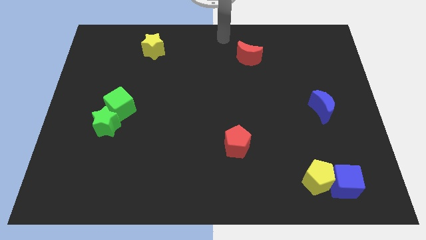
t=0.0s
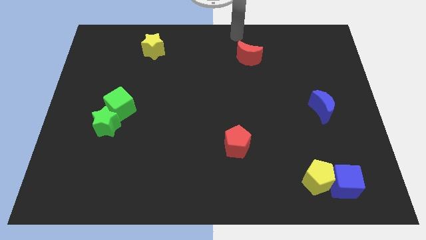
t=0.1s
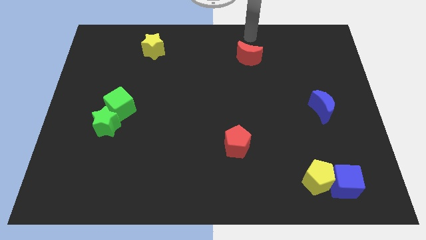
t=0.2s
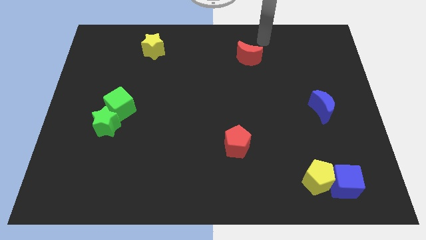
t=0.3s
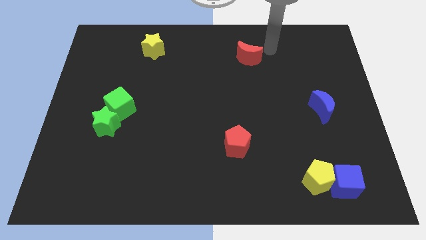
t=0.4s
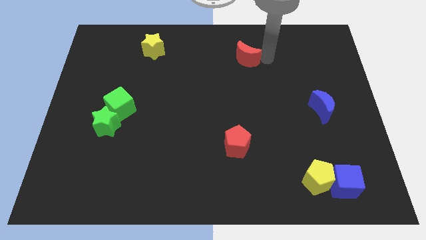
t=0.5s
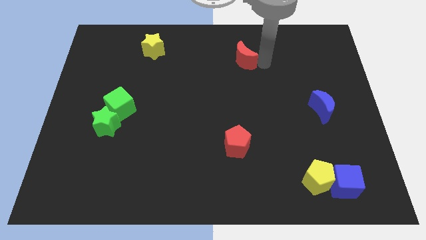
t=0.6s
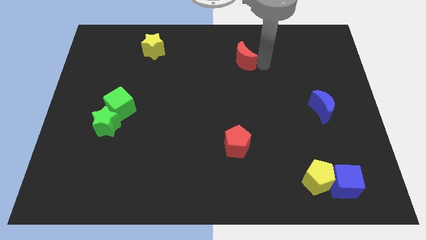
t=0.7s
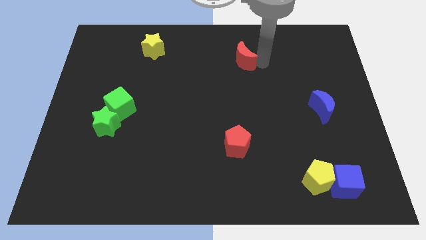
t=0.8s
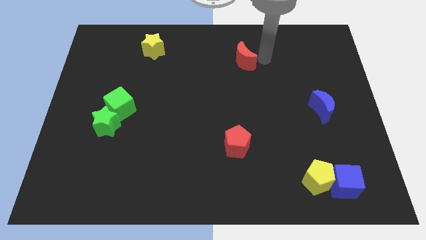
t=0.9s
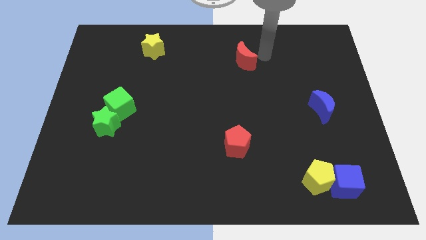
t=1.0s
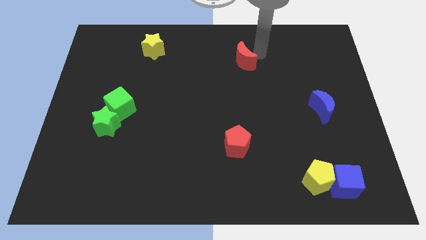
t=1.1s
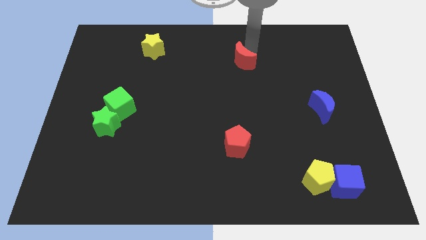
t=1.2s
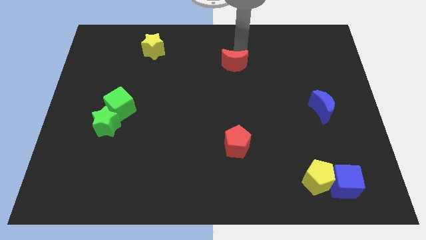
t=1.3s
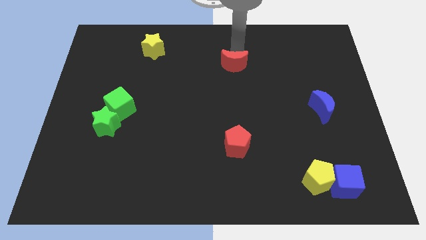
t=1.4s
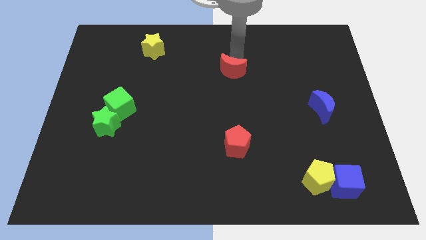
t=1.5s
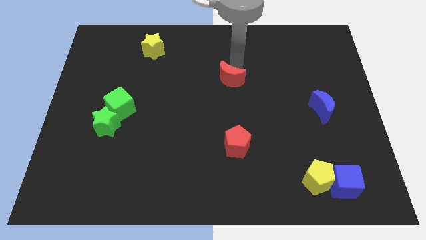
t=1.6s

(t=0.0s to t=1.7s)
slide the red moon towards the red pentagon

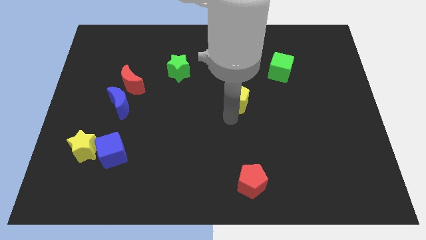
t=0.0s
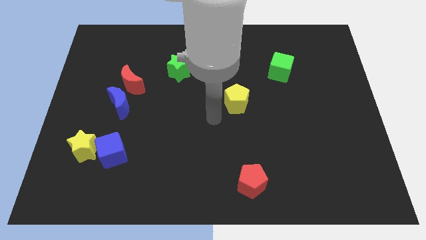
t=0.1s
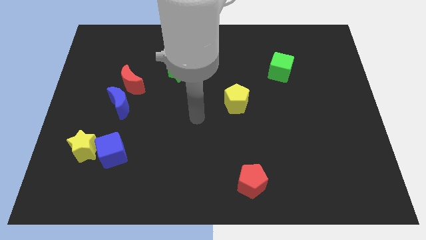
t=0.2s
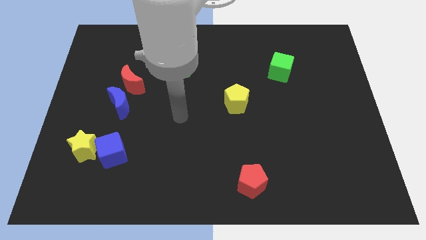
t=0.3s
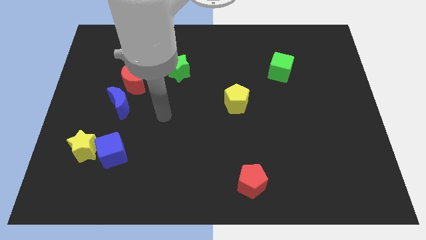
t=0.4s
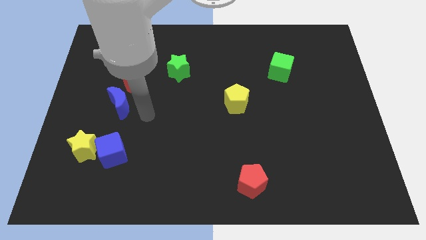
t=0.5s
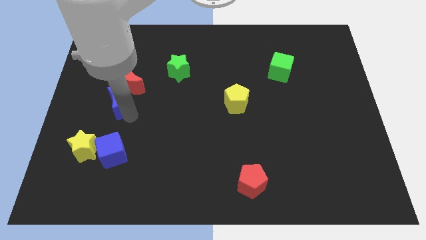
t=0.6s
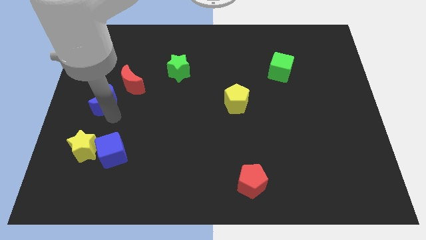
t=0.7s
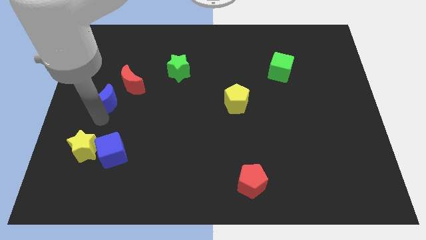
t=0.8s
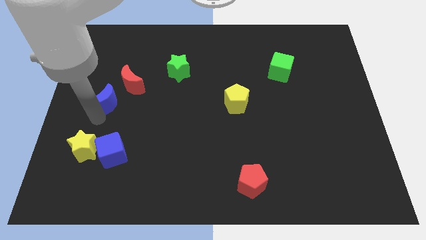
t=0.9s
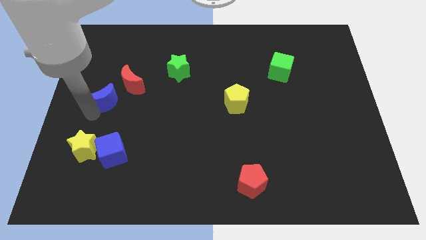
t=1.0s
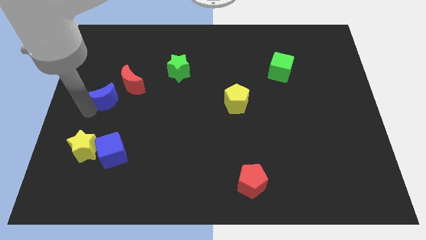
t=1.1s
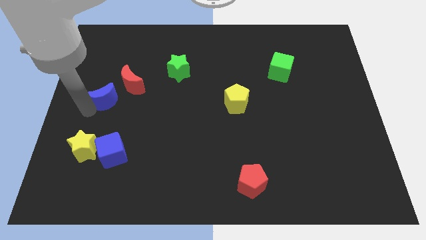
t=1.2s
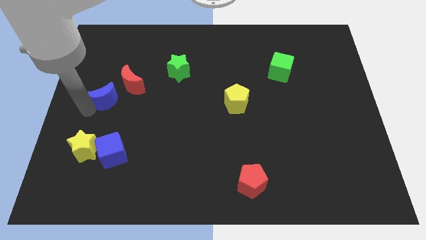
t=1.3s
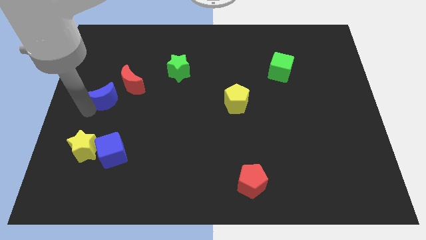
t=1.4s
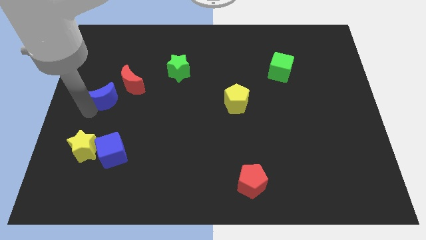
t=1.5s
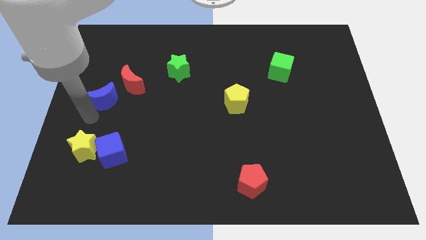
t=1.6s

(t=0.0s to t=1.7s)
rotate the blue moon to the left side

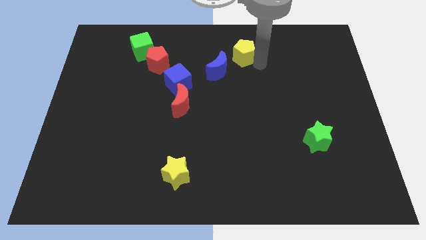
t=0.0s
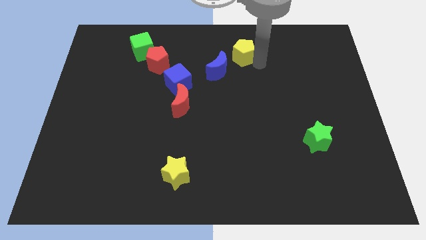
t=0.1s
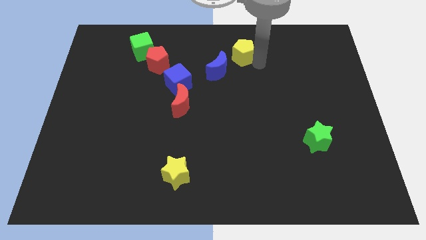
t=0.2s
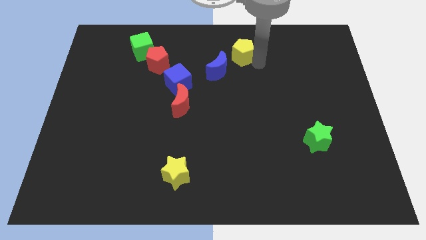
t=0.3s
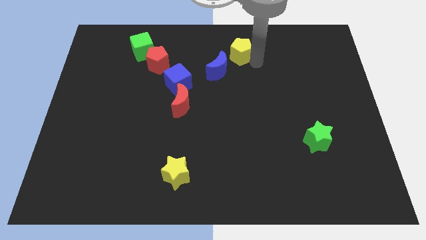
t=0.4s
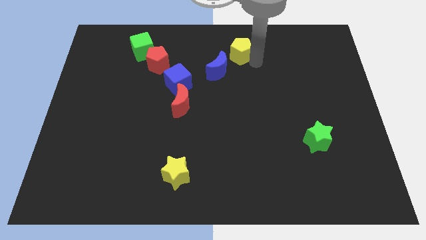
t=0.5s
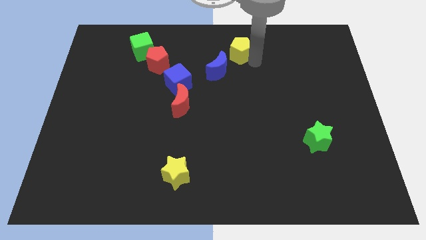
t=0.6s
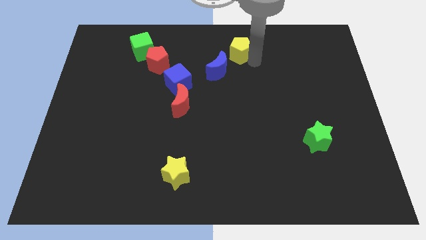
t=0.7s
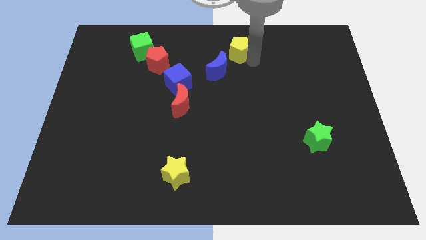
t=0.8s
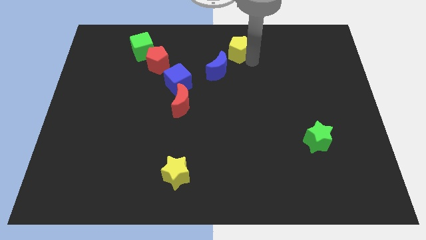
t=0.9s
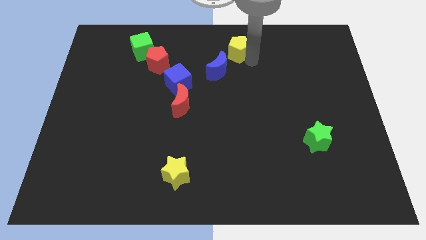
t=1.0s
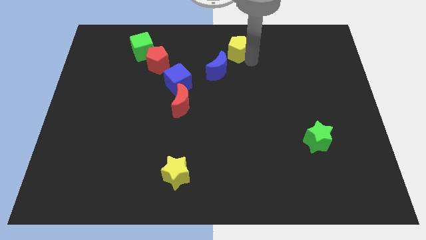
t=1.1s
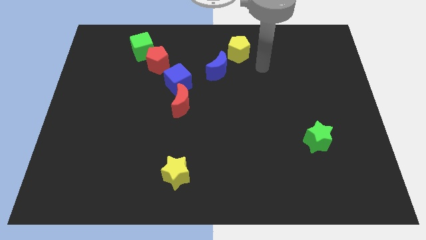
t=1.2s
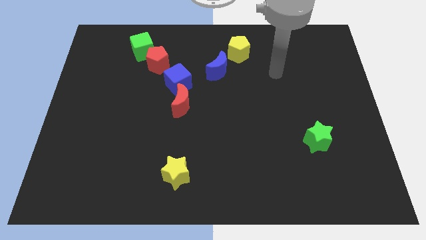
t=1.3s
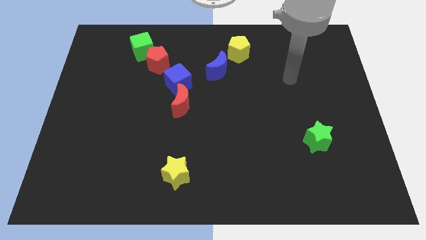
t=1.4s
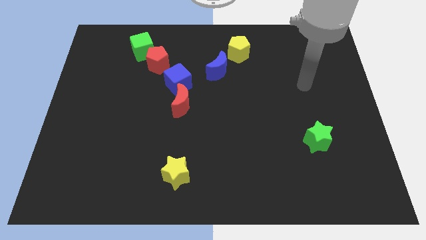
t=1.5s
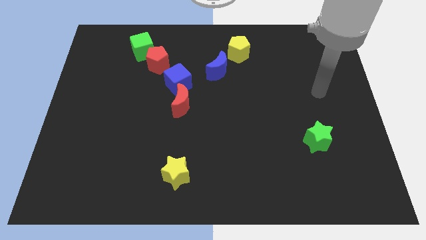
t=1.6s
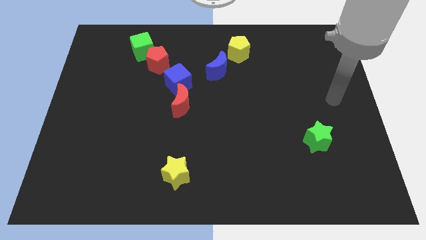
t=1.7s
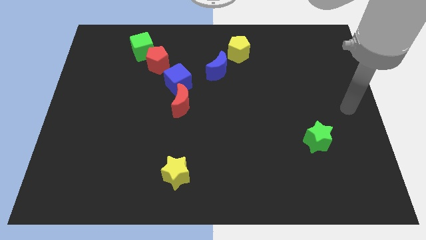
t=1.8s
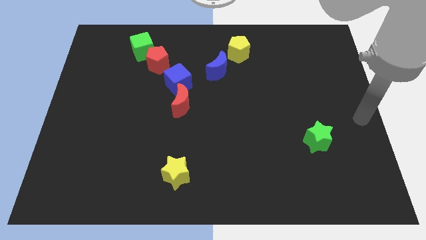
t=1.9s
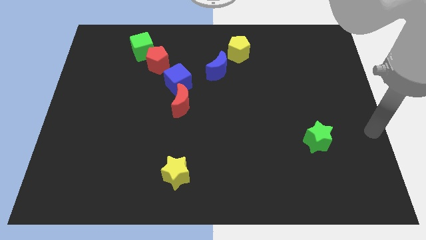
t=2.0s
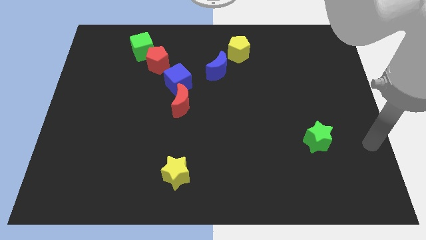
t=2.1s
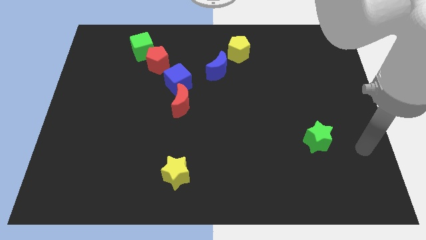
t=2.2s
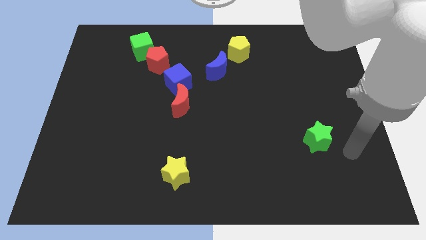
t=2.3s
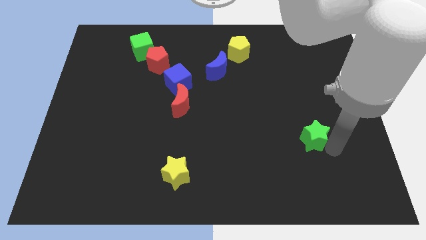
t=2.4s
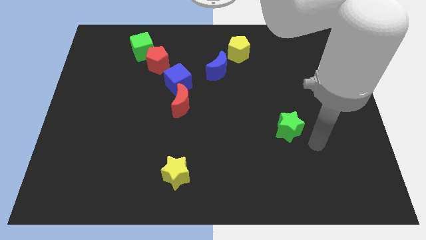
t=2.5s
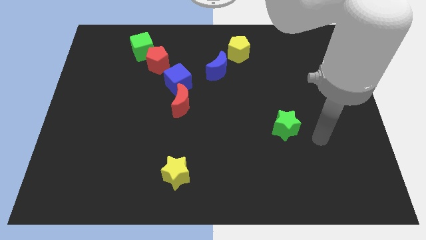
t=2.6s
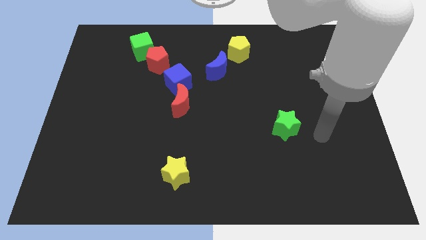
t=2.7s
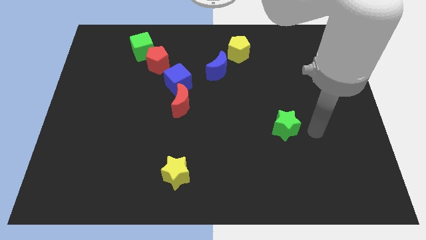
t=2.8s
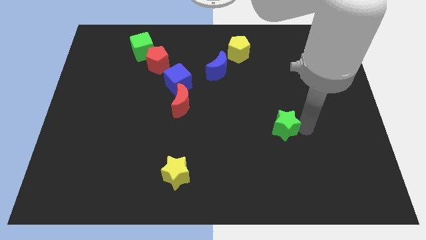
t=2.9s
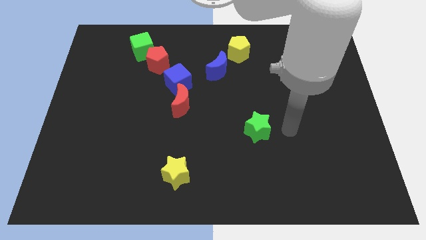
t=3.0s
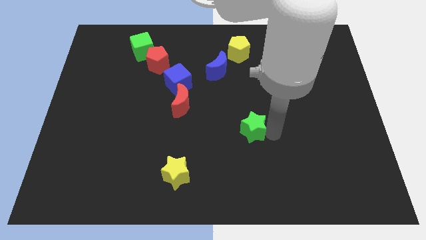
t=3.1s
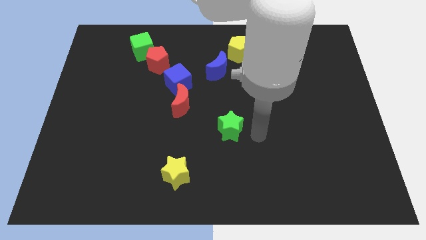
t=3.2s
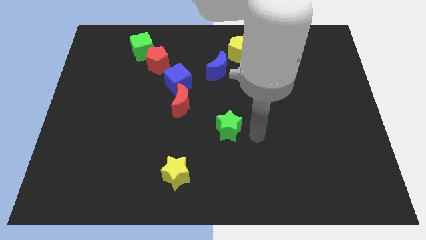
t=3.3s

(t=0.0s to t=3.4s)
push the green star towards the center of the board

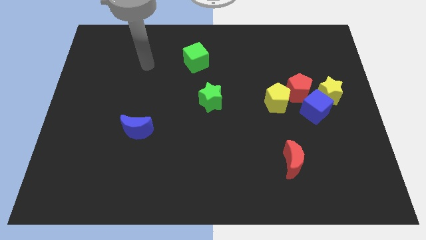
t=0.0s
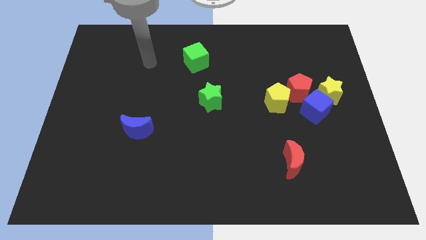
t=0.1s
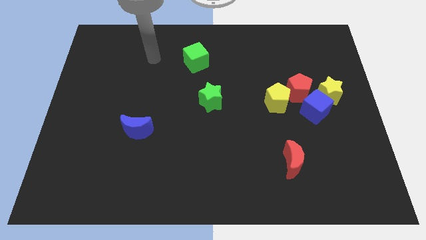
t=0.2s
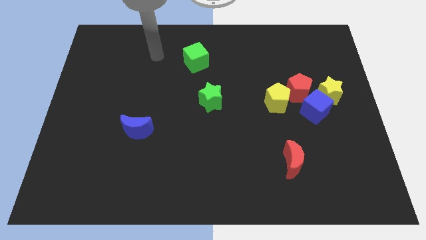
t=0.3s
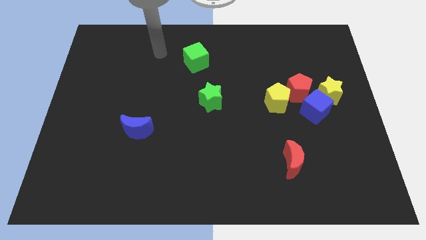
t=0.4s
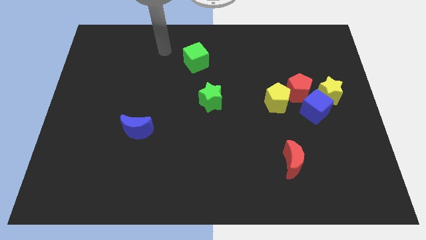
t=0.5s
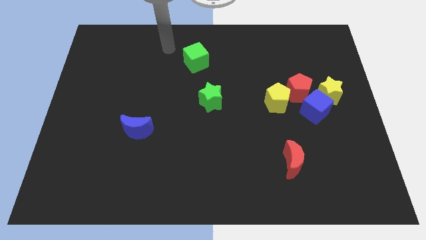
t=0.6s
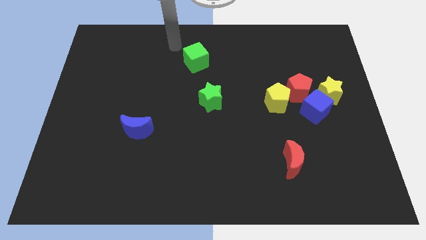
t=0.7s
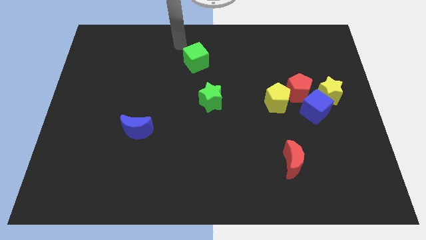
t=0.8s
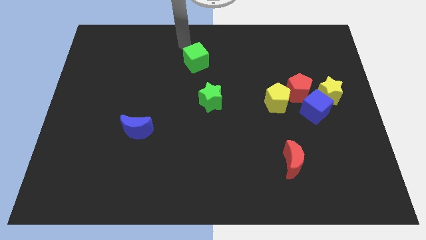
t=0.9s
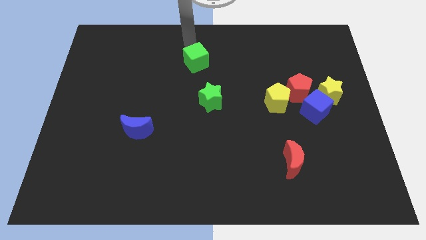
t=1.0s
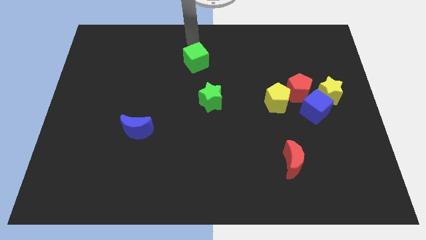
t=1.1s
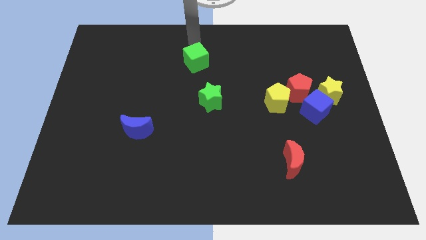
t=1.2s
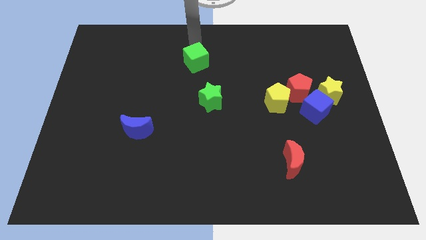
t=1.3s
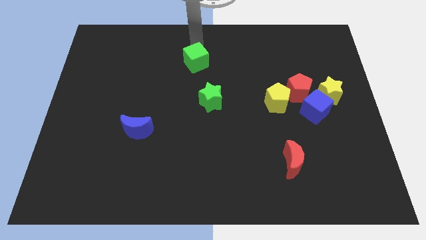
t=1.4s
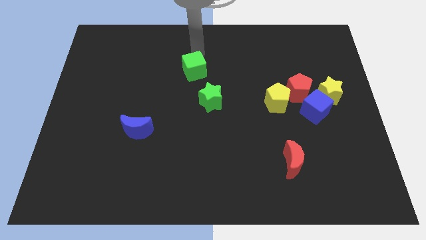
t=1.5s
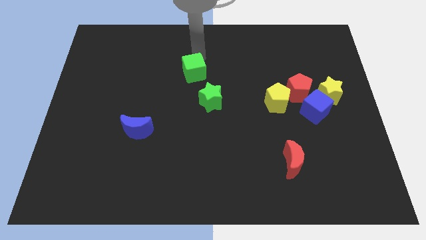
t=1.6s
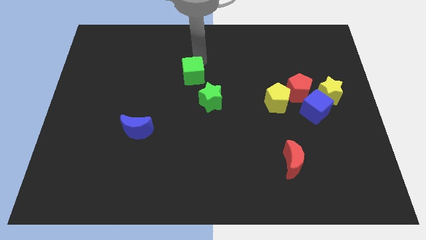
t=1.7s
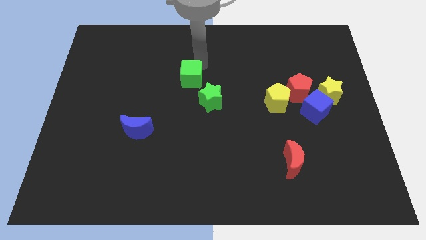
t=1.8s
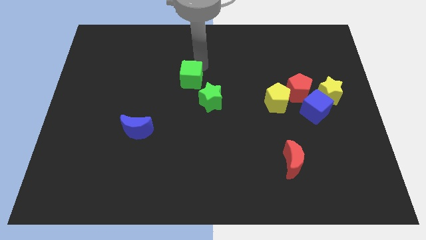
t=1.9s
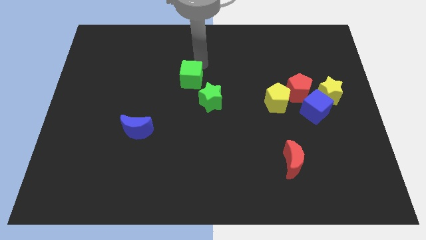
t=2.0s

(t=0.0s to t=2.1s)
move the green cube to the top left side of the green star

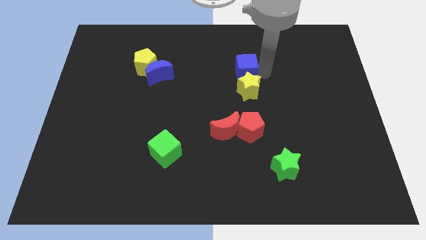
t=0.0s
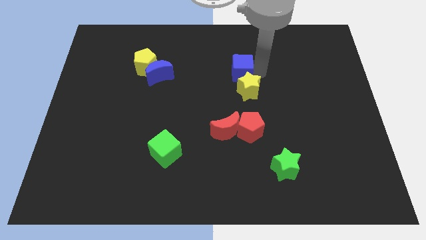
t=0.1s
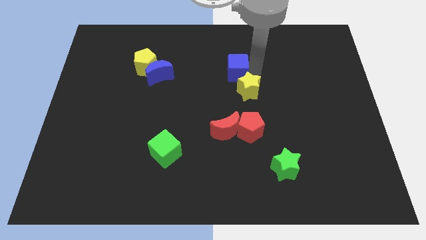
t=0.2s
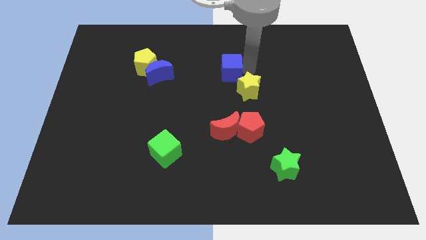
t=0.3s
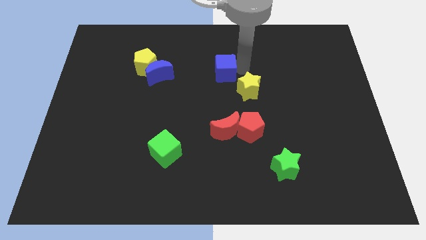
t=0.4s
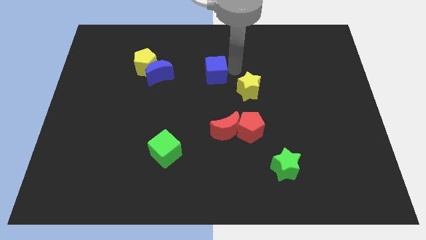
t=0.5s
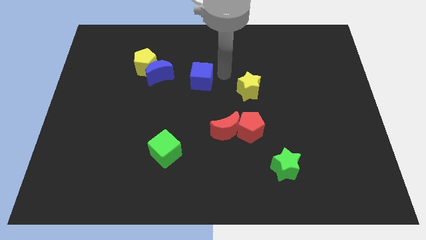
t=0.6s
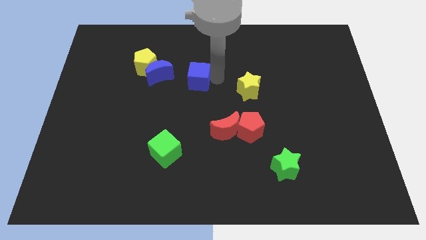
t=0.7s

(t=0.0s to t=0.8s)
place the blue cube in between the blue moon and yellow star
